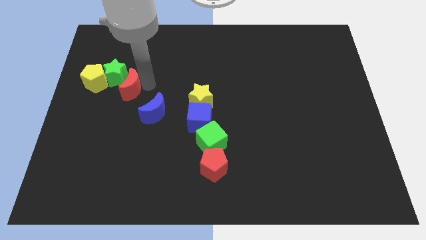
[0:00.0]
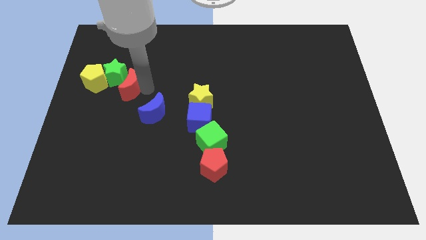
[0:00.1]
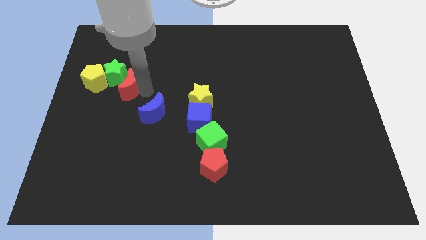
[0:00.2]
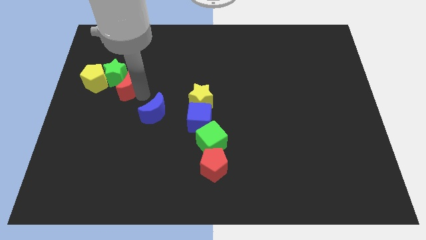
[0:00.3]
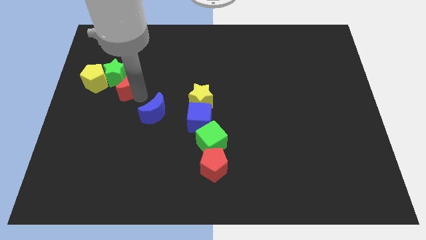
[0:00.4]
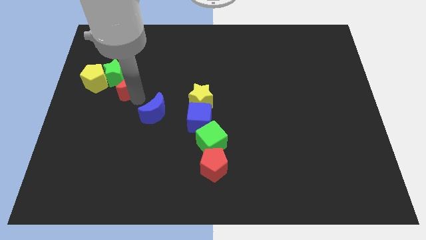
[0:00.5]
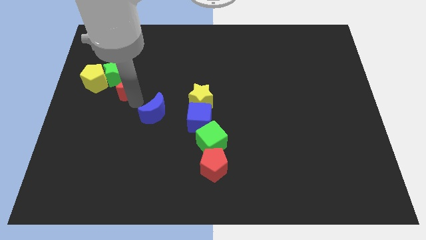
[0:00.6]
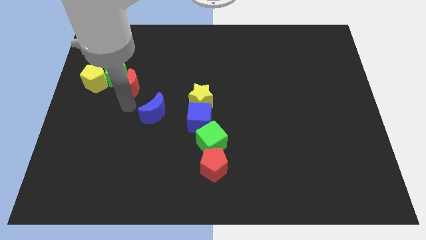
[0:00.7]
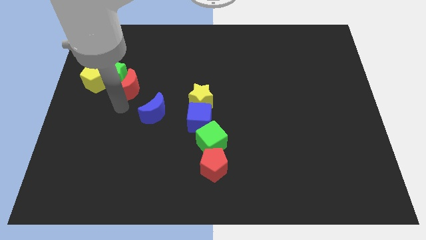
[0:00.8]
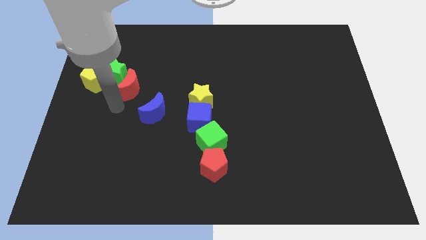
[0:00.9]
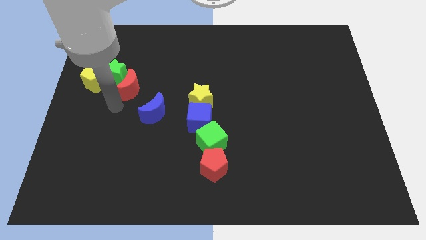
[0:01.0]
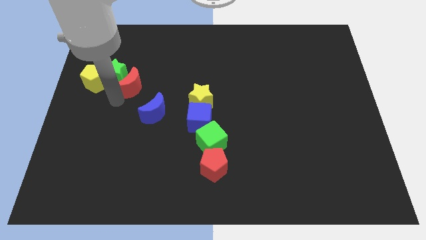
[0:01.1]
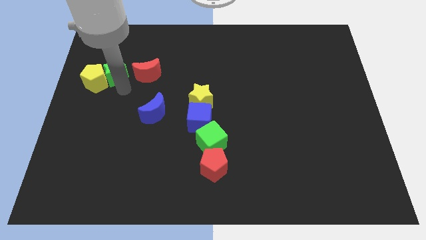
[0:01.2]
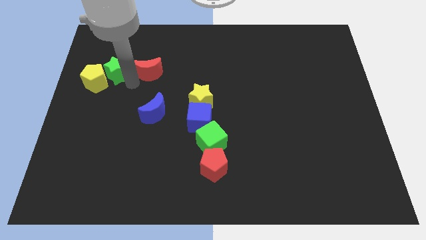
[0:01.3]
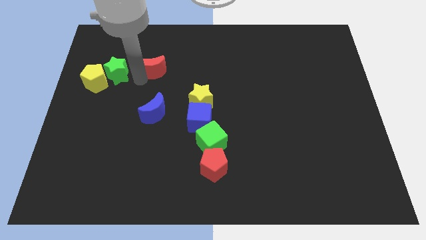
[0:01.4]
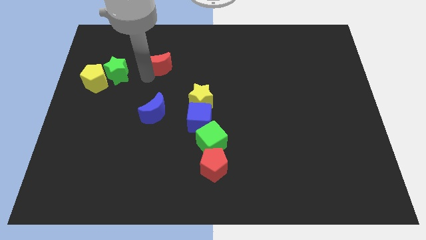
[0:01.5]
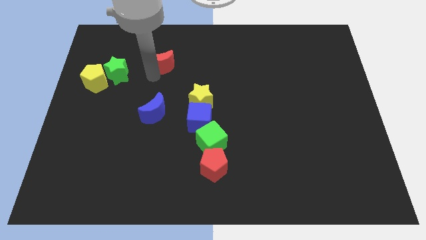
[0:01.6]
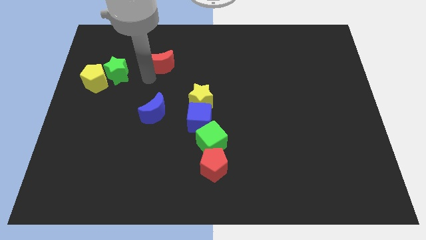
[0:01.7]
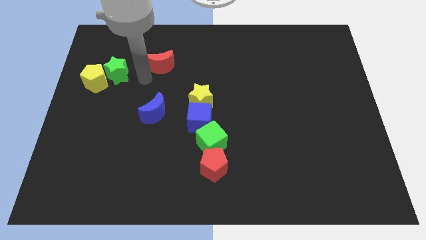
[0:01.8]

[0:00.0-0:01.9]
move the red moon away from the green star

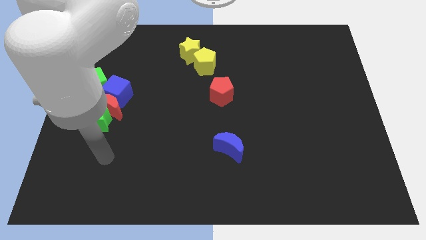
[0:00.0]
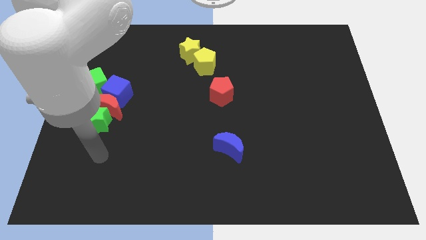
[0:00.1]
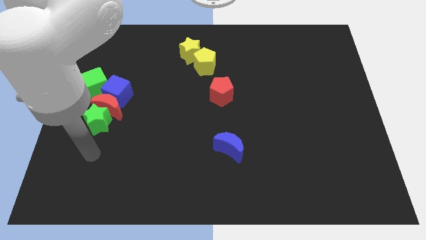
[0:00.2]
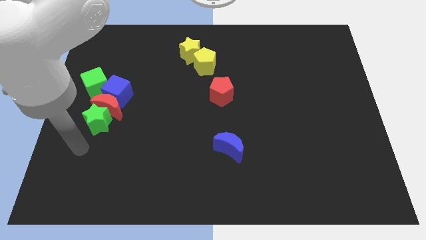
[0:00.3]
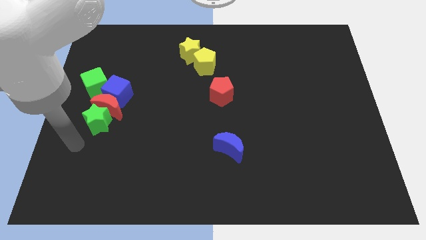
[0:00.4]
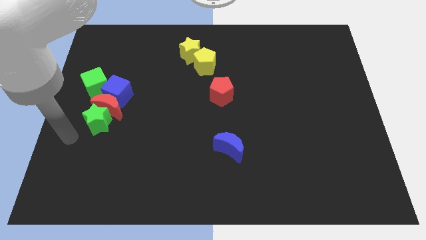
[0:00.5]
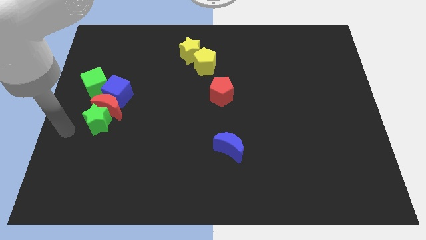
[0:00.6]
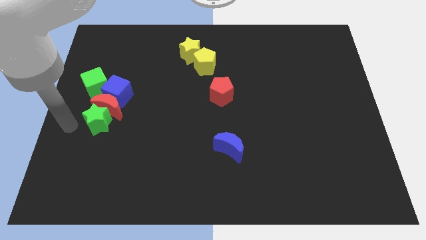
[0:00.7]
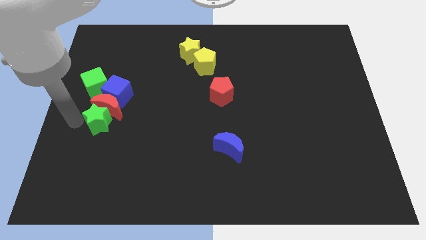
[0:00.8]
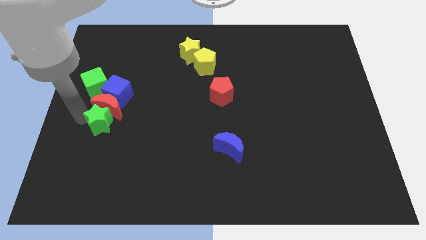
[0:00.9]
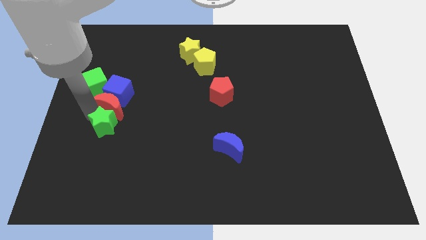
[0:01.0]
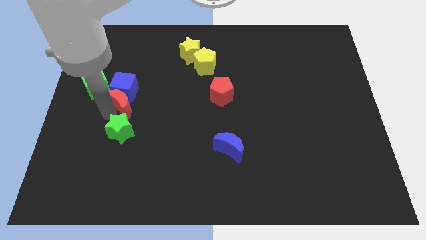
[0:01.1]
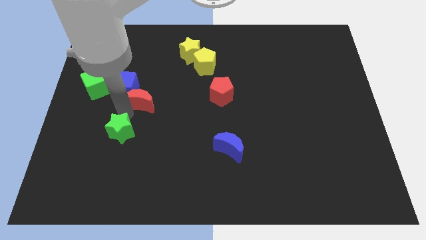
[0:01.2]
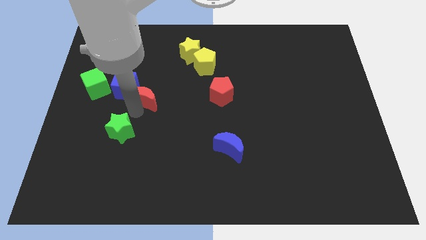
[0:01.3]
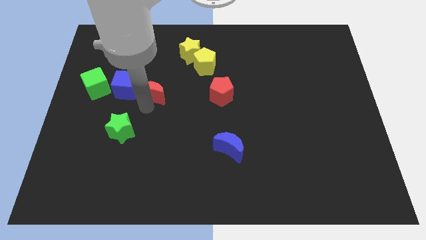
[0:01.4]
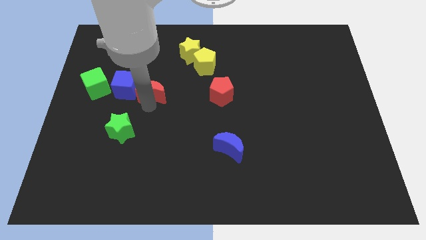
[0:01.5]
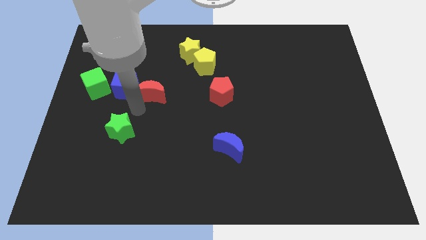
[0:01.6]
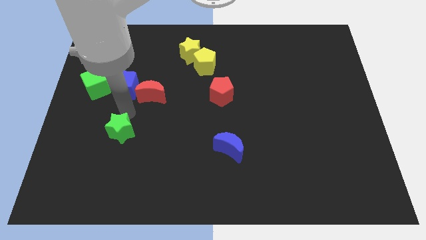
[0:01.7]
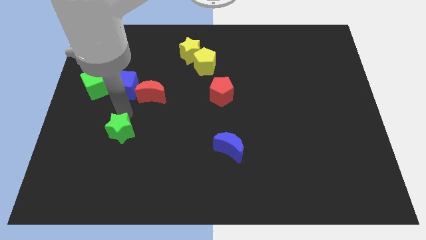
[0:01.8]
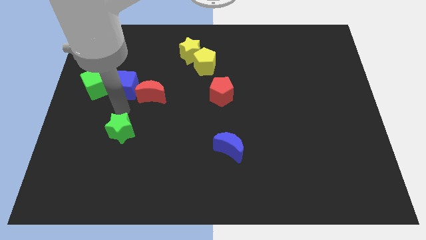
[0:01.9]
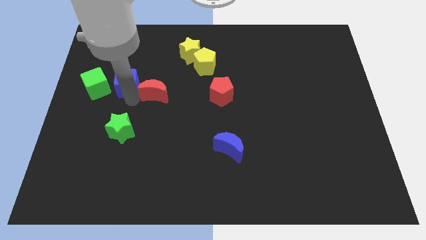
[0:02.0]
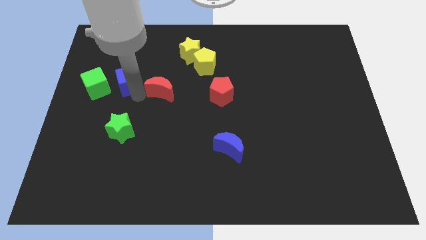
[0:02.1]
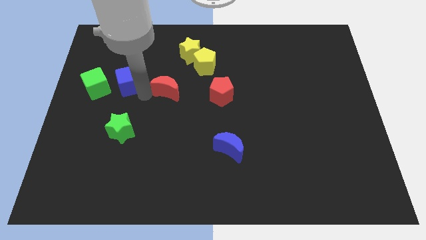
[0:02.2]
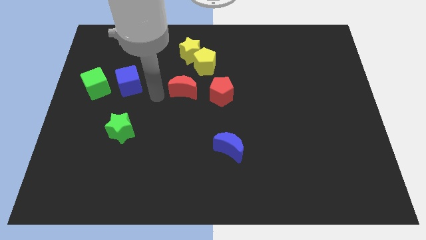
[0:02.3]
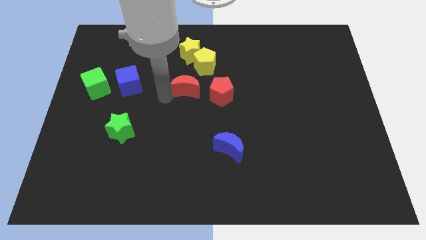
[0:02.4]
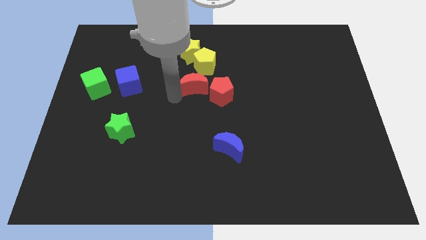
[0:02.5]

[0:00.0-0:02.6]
push red crescent to the left of the red pentagon

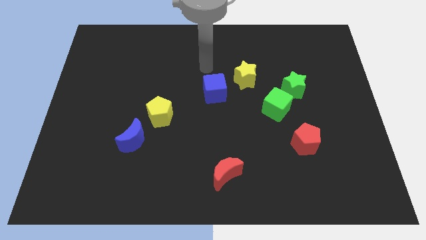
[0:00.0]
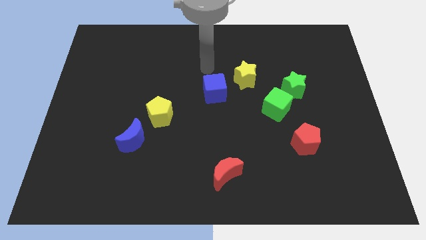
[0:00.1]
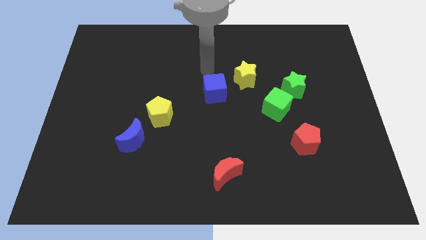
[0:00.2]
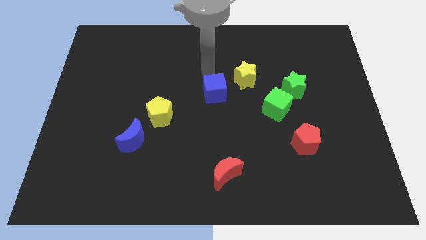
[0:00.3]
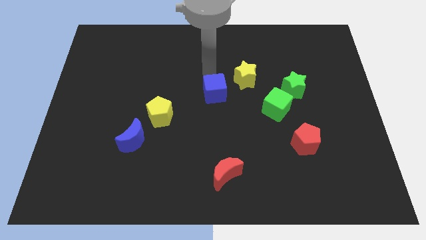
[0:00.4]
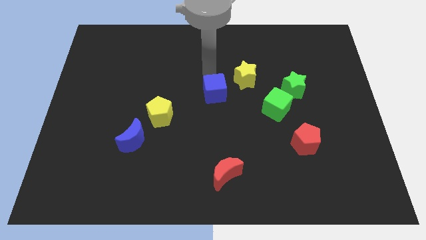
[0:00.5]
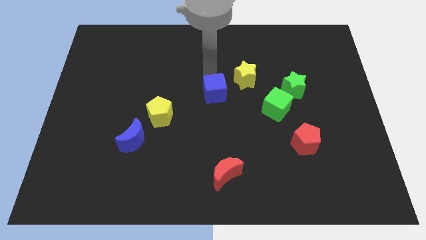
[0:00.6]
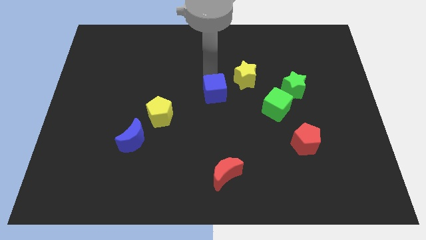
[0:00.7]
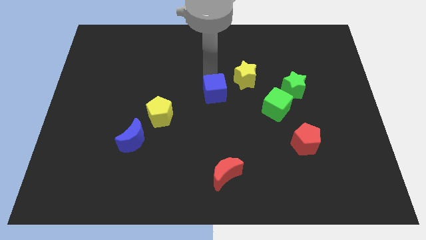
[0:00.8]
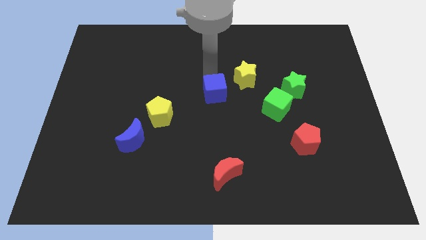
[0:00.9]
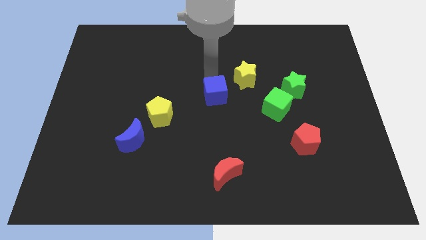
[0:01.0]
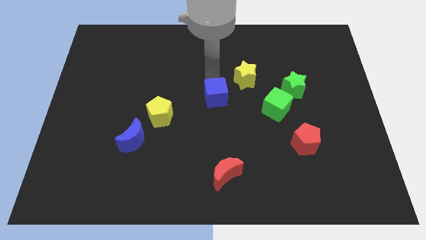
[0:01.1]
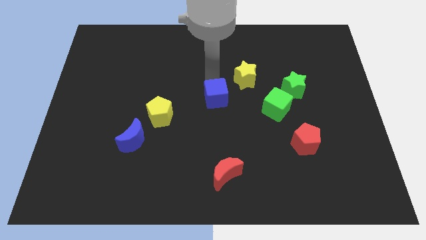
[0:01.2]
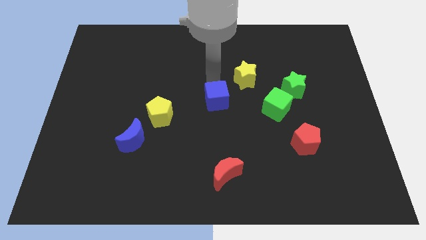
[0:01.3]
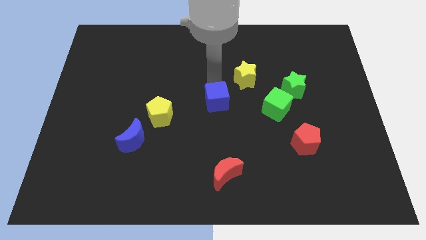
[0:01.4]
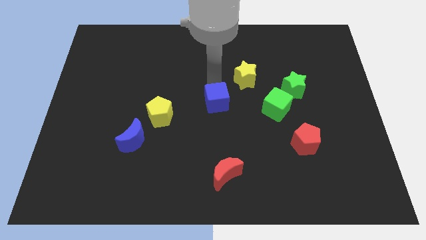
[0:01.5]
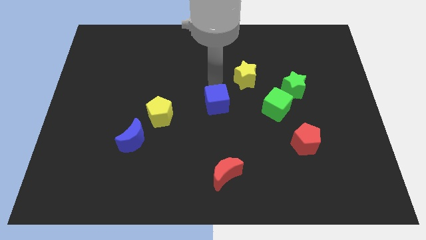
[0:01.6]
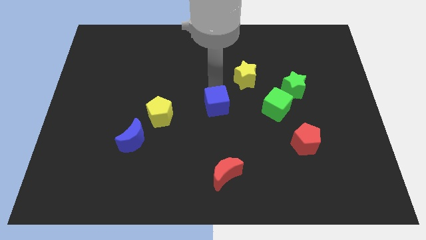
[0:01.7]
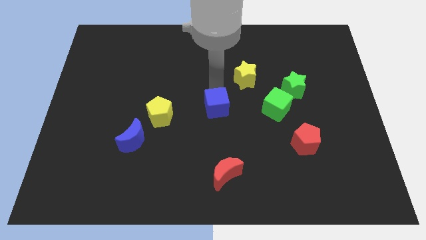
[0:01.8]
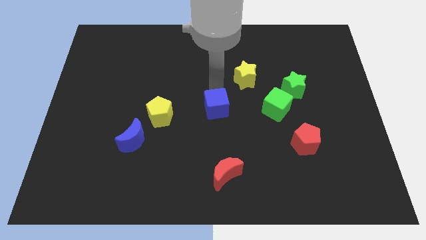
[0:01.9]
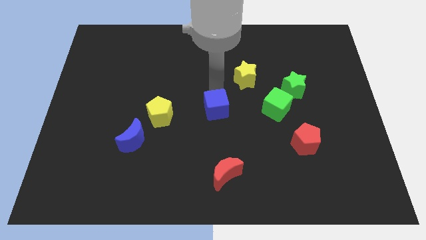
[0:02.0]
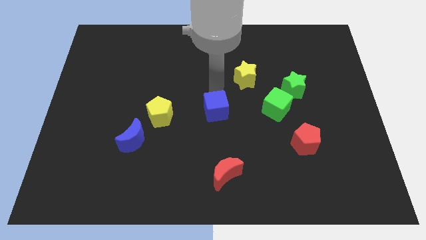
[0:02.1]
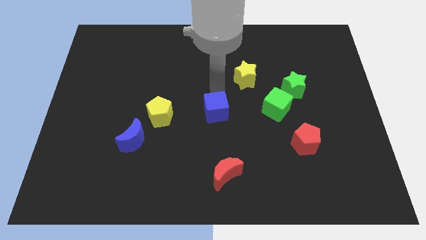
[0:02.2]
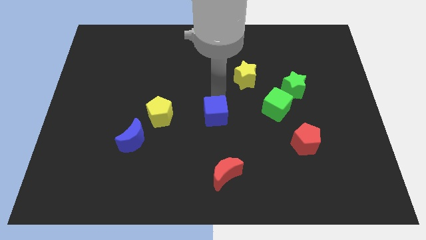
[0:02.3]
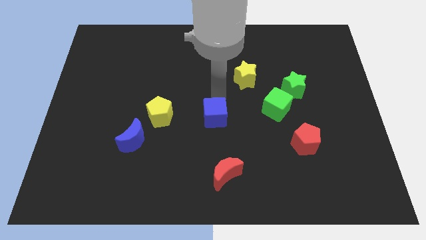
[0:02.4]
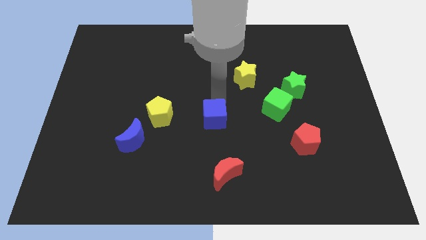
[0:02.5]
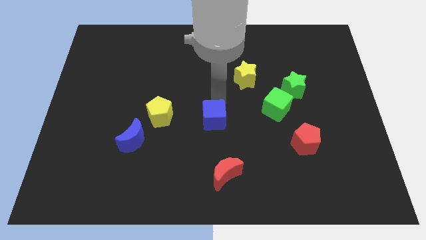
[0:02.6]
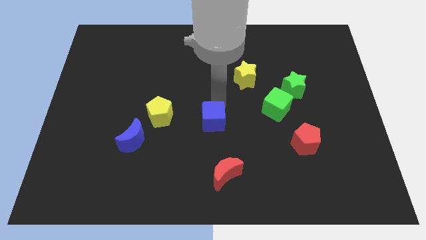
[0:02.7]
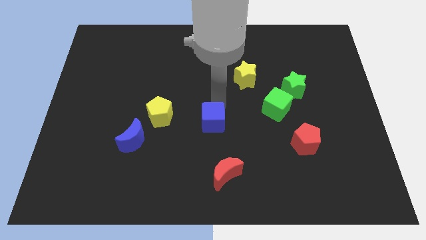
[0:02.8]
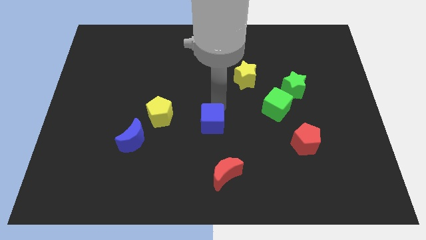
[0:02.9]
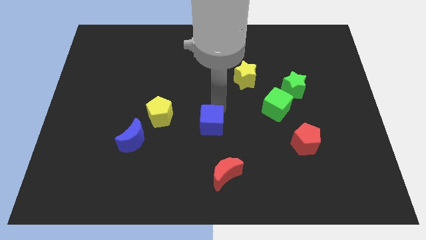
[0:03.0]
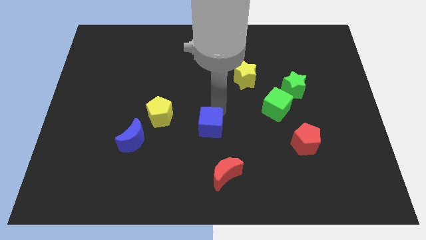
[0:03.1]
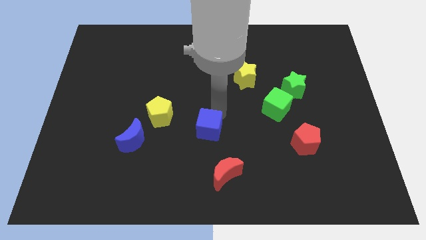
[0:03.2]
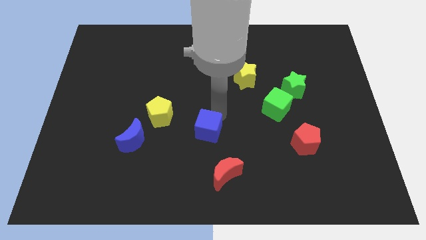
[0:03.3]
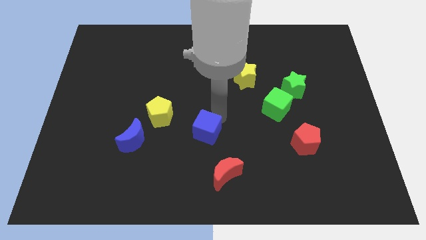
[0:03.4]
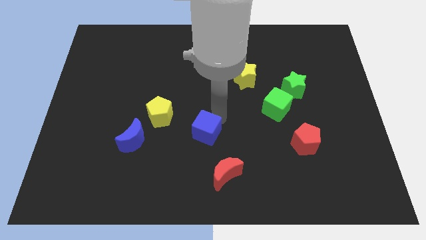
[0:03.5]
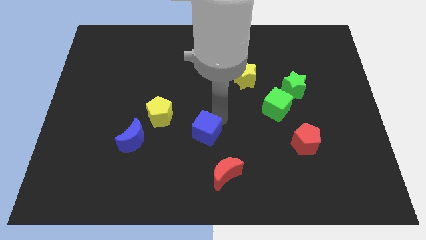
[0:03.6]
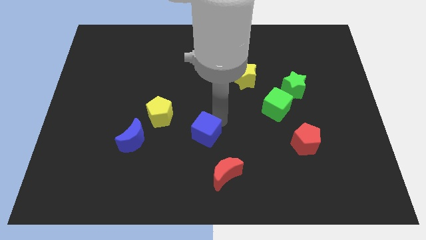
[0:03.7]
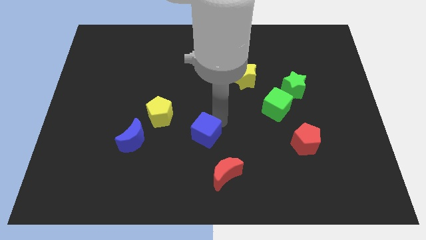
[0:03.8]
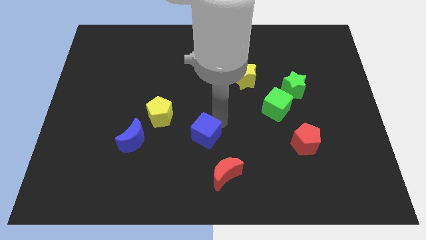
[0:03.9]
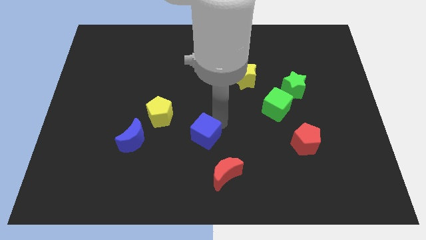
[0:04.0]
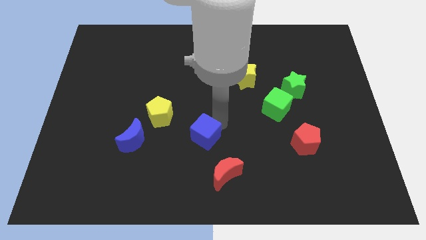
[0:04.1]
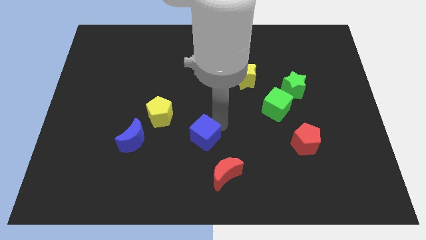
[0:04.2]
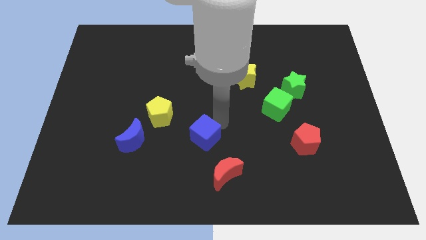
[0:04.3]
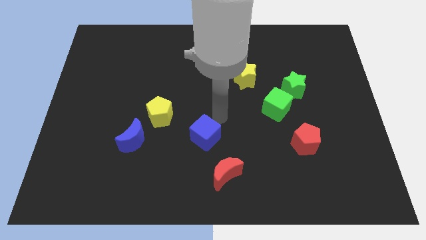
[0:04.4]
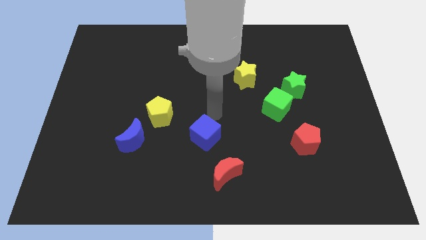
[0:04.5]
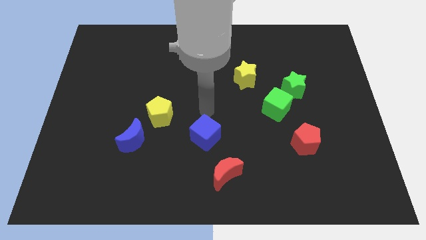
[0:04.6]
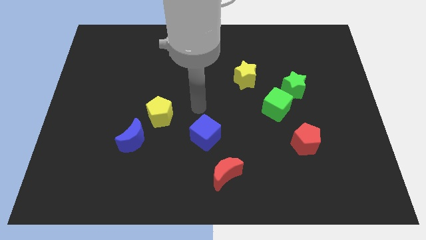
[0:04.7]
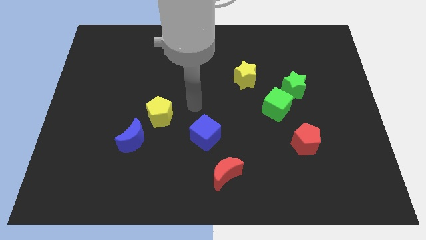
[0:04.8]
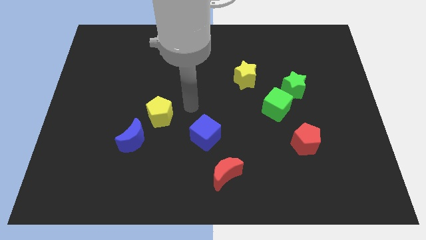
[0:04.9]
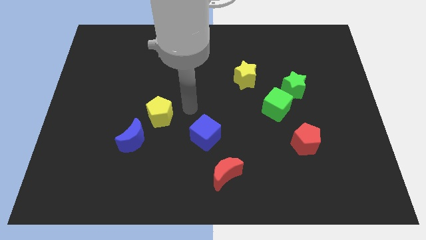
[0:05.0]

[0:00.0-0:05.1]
push blue cube to the right of blue moon
